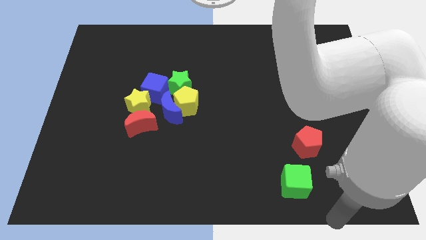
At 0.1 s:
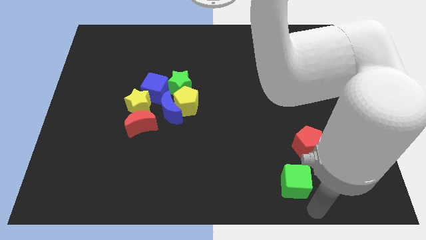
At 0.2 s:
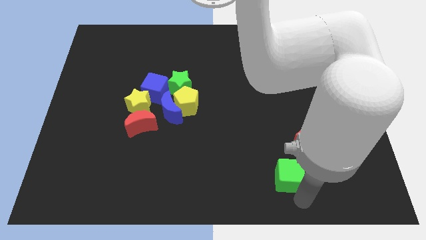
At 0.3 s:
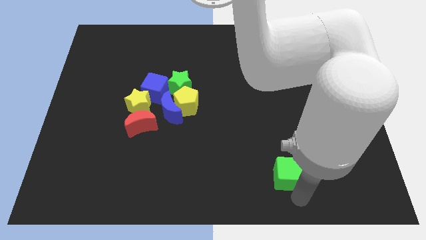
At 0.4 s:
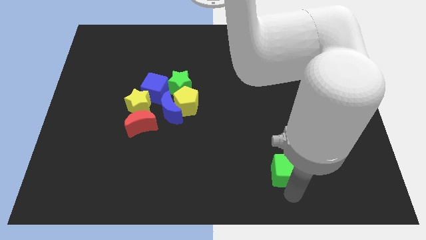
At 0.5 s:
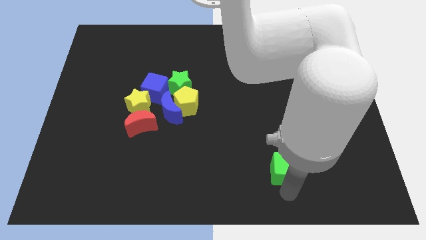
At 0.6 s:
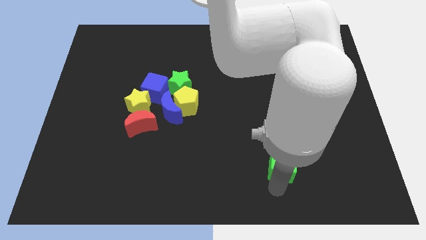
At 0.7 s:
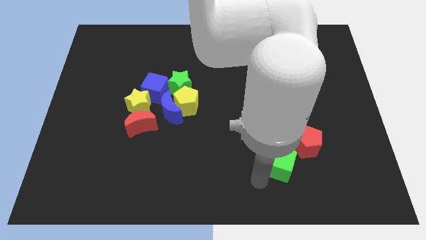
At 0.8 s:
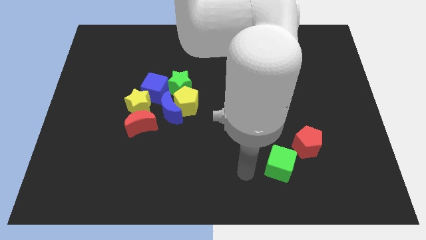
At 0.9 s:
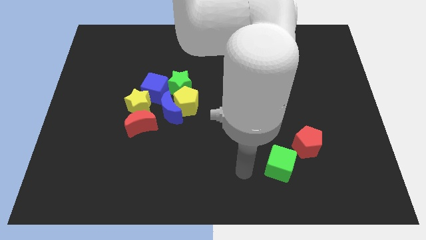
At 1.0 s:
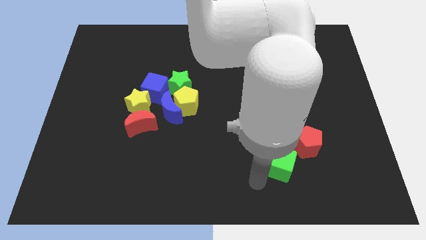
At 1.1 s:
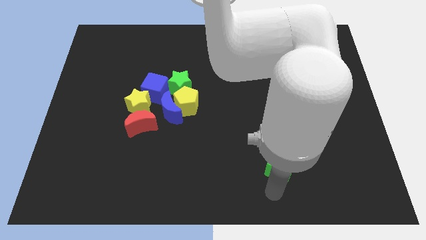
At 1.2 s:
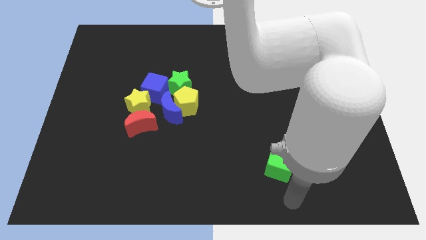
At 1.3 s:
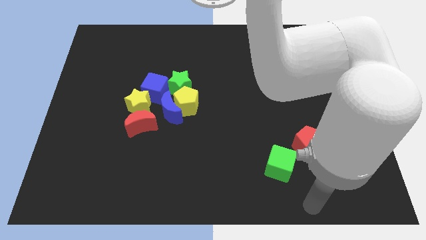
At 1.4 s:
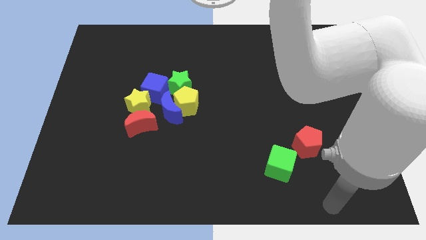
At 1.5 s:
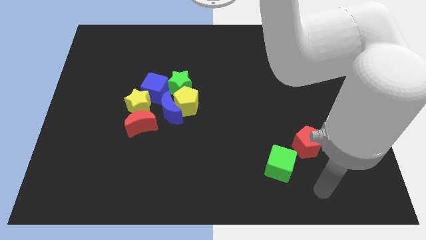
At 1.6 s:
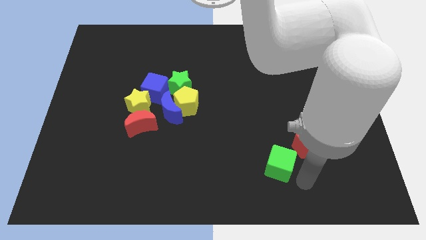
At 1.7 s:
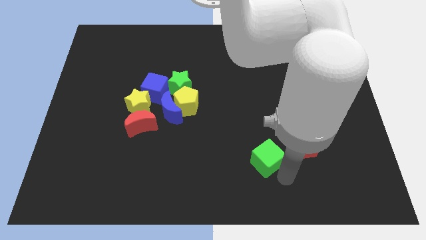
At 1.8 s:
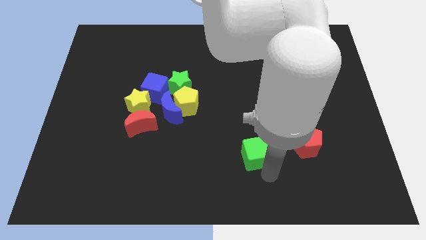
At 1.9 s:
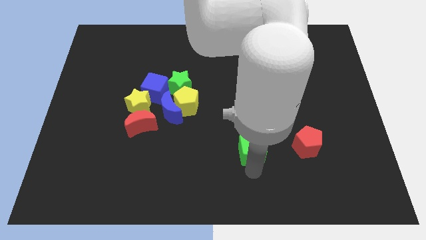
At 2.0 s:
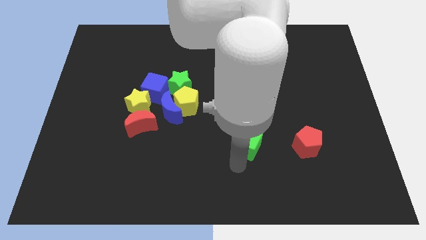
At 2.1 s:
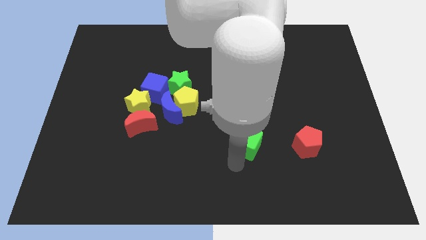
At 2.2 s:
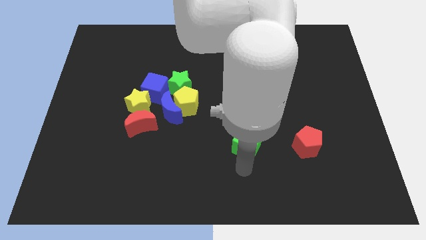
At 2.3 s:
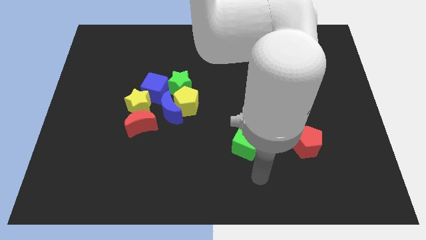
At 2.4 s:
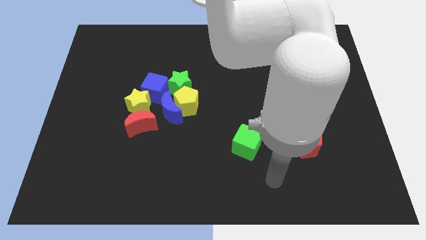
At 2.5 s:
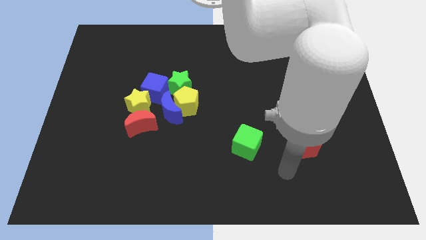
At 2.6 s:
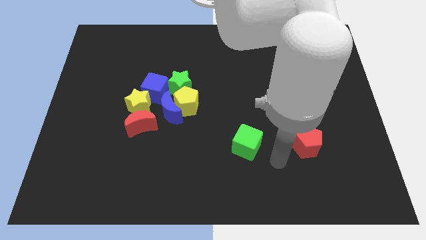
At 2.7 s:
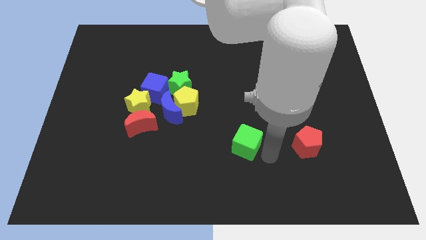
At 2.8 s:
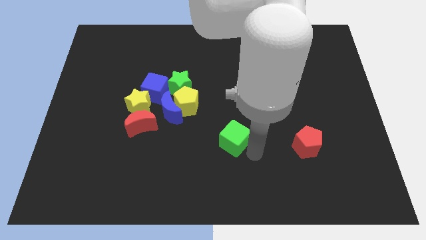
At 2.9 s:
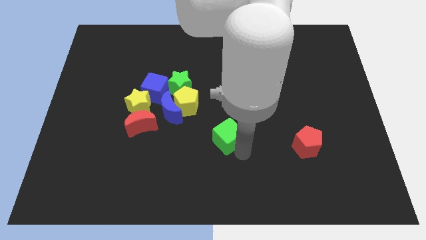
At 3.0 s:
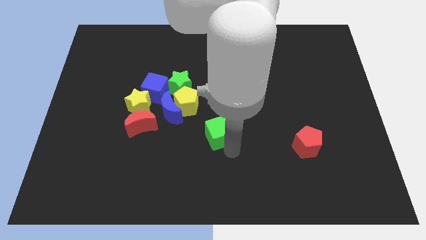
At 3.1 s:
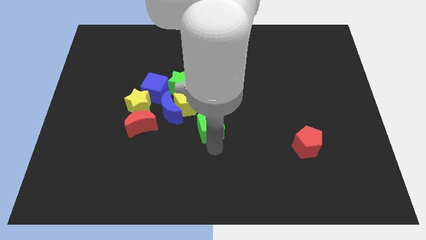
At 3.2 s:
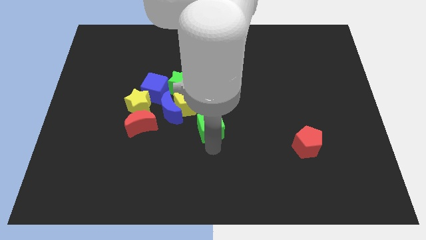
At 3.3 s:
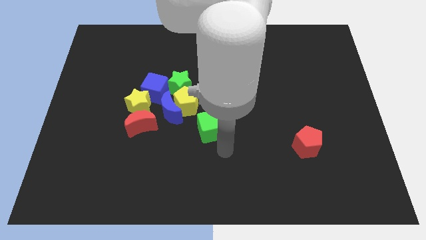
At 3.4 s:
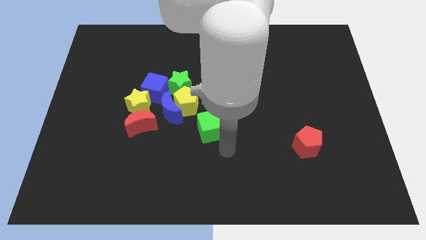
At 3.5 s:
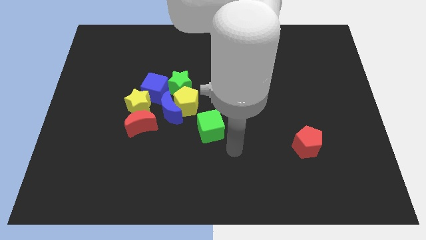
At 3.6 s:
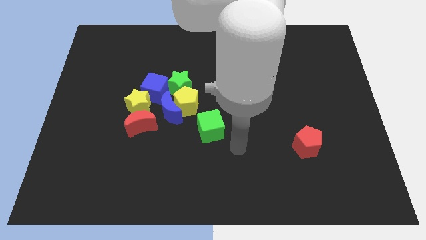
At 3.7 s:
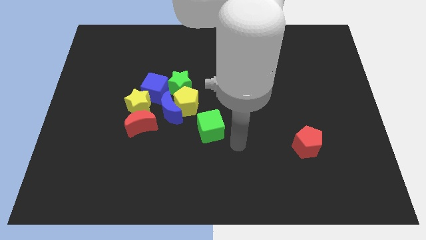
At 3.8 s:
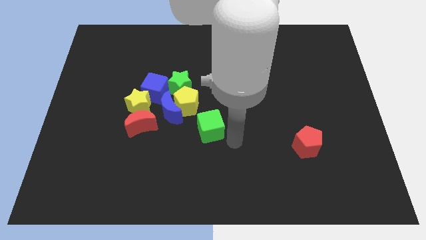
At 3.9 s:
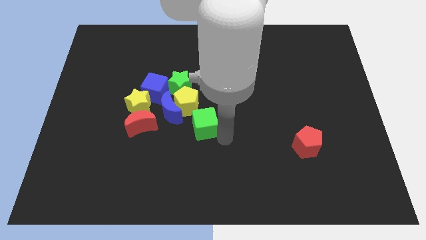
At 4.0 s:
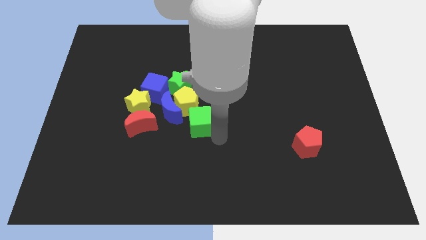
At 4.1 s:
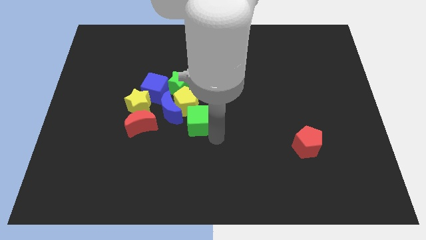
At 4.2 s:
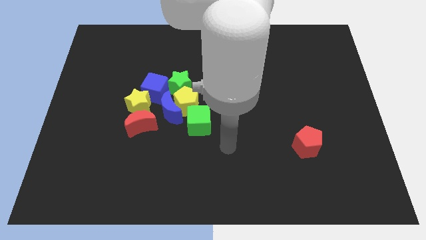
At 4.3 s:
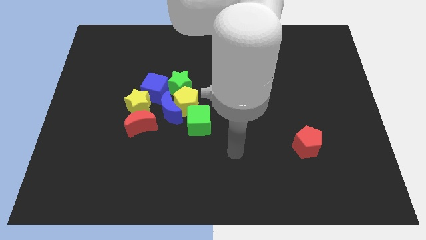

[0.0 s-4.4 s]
push the green cube to the bottom of the yellow pentagon

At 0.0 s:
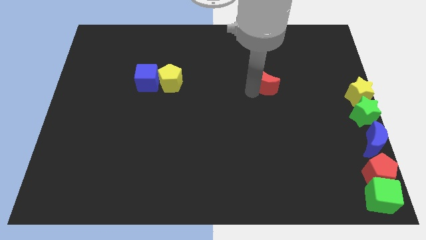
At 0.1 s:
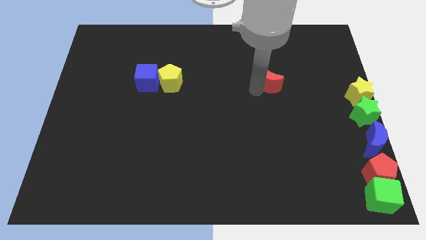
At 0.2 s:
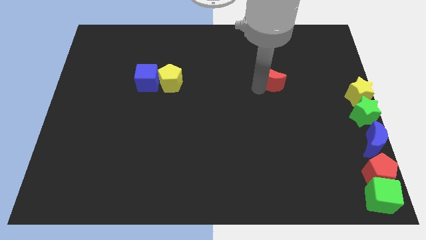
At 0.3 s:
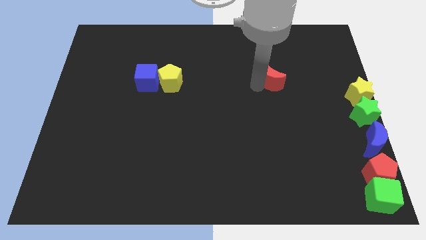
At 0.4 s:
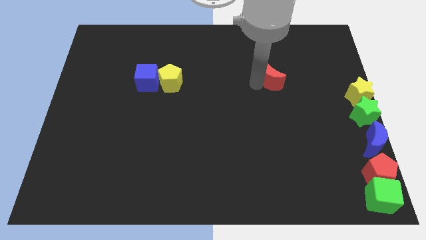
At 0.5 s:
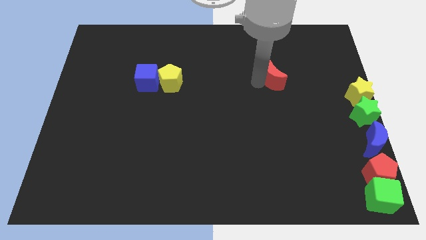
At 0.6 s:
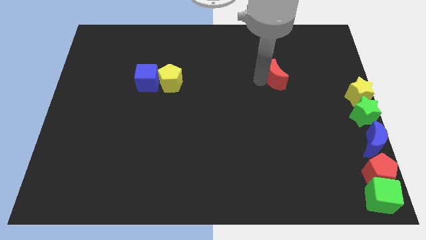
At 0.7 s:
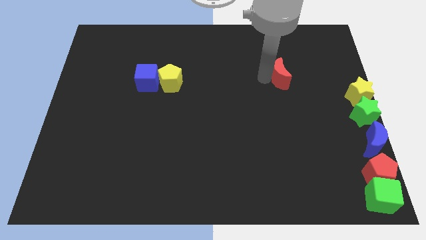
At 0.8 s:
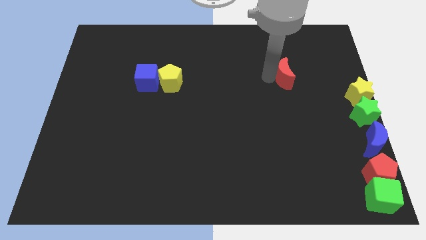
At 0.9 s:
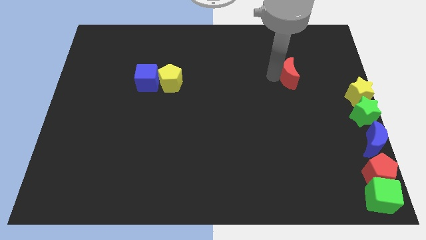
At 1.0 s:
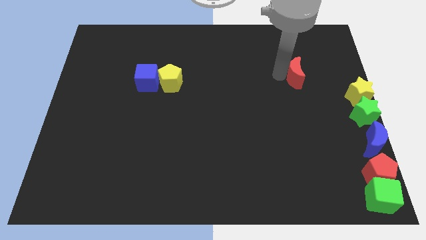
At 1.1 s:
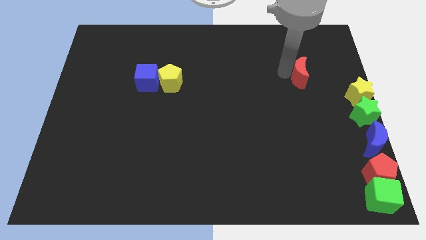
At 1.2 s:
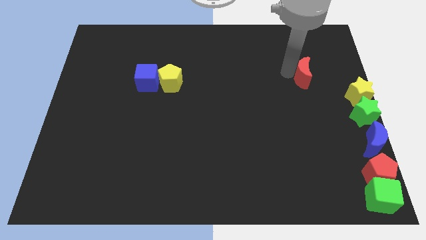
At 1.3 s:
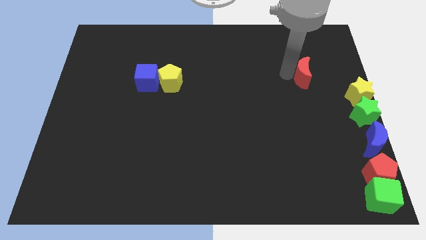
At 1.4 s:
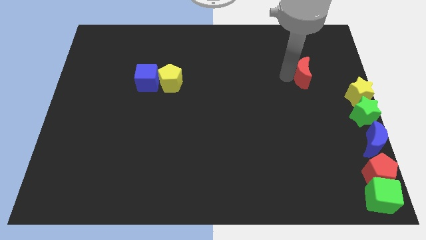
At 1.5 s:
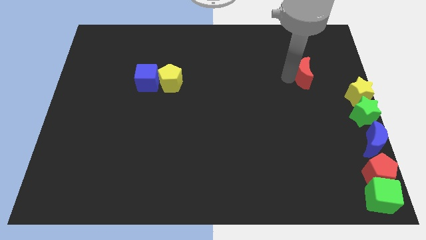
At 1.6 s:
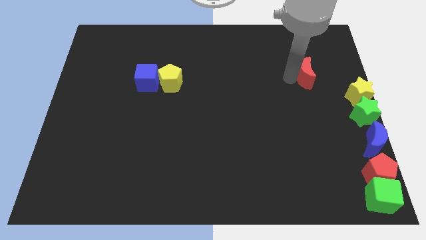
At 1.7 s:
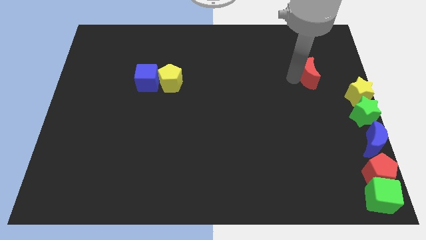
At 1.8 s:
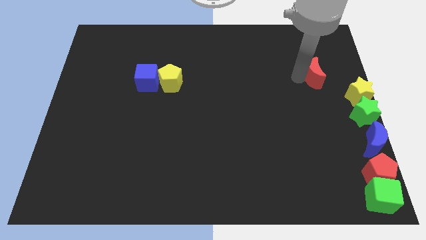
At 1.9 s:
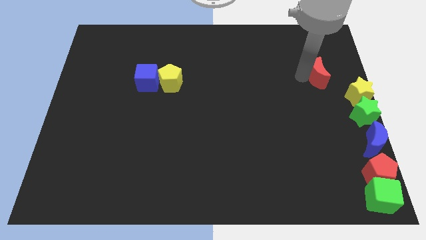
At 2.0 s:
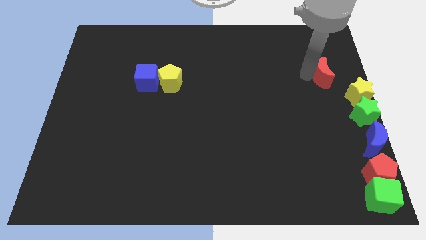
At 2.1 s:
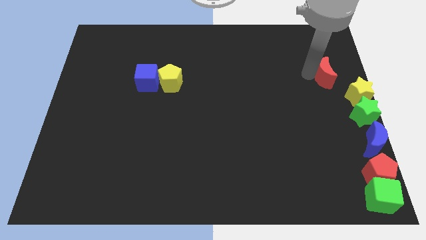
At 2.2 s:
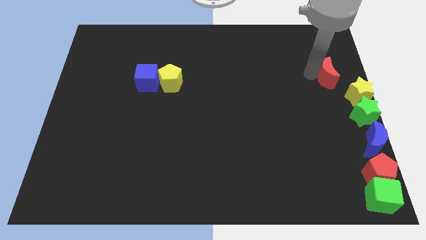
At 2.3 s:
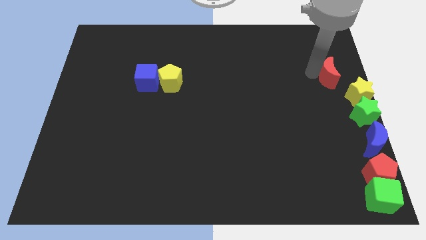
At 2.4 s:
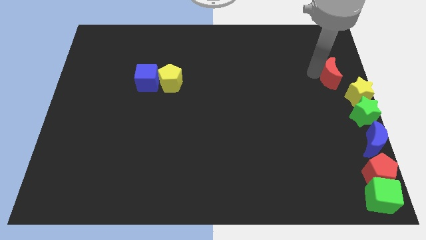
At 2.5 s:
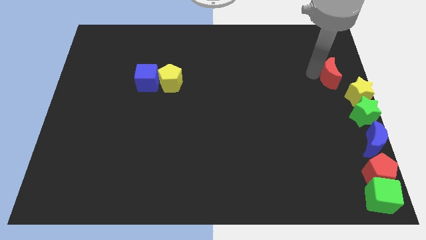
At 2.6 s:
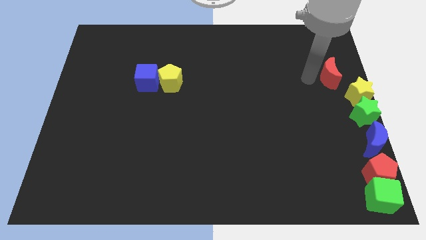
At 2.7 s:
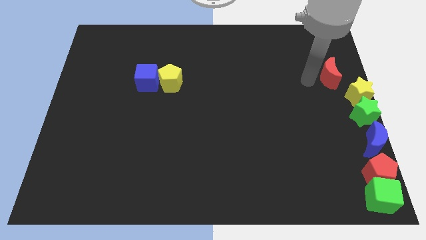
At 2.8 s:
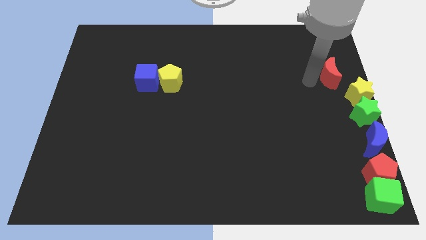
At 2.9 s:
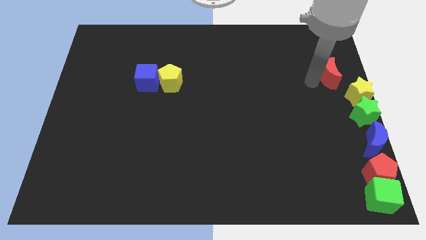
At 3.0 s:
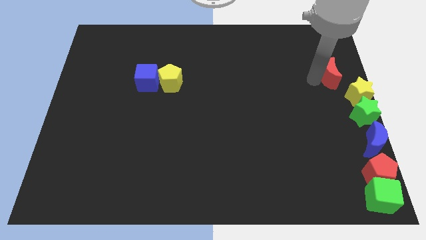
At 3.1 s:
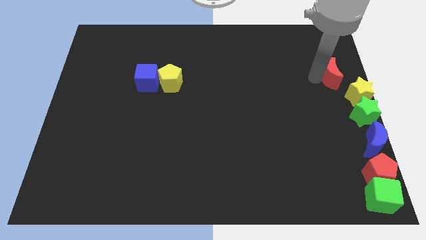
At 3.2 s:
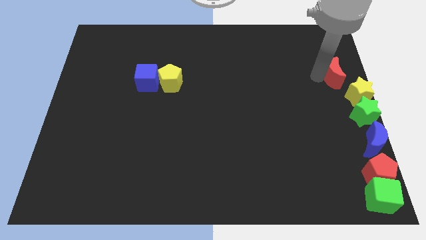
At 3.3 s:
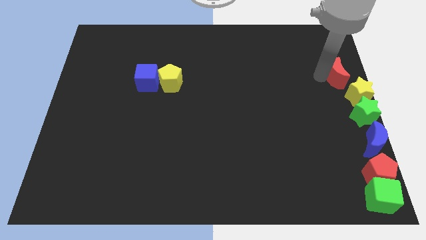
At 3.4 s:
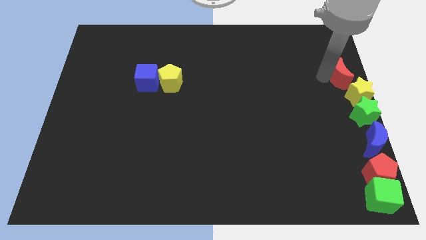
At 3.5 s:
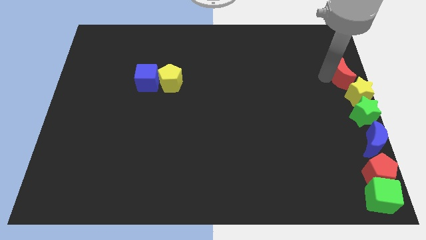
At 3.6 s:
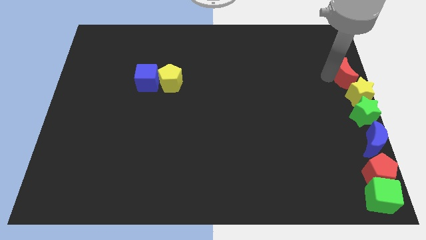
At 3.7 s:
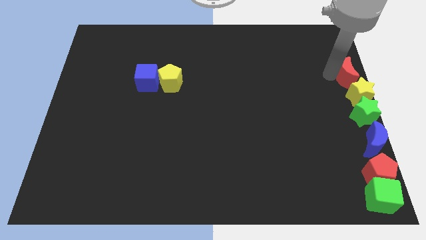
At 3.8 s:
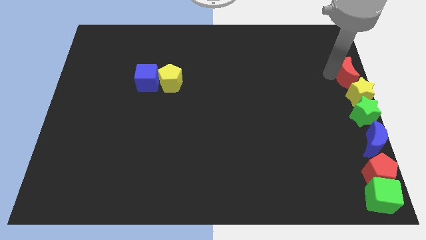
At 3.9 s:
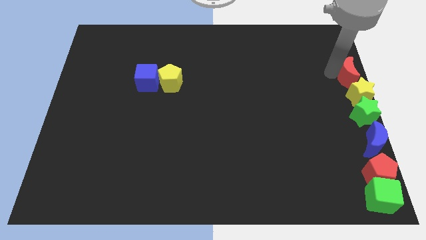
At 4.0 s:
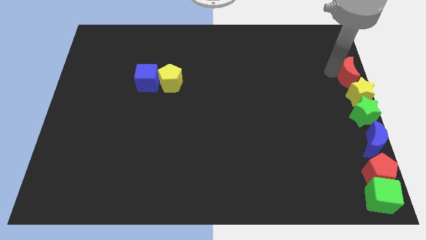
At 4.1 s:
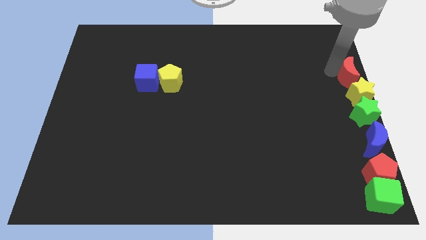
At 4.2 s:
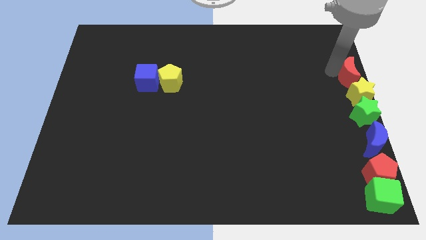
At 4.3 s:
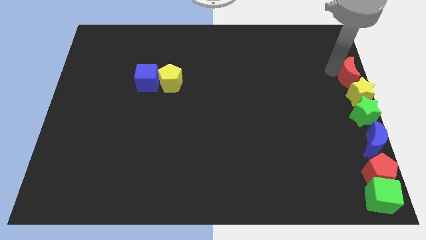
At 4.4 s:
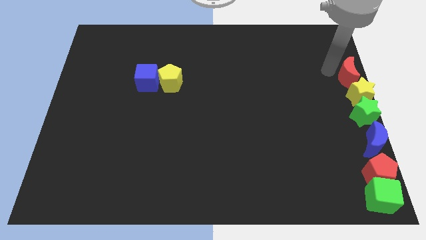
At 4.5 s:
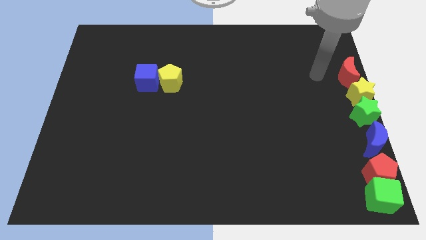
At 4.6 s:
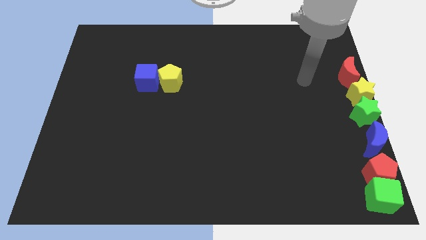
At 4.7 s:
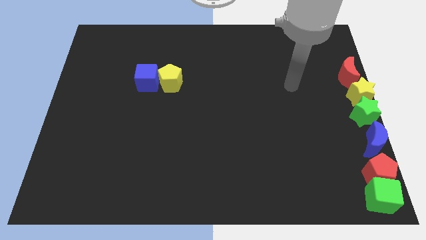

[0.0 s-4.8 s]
push red crescent to the top of yellow star
